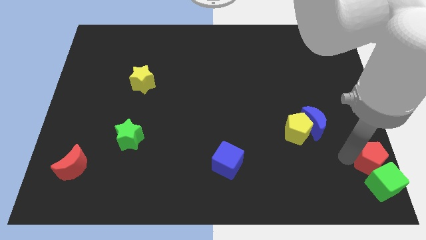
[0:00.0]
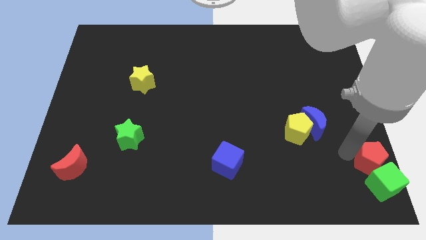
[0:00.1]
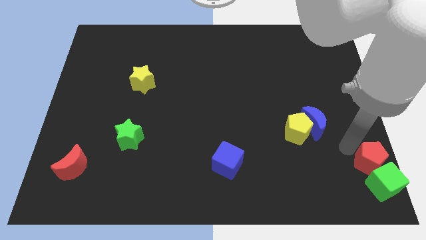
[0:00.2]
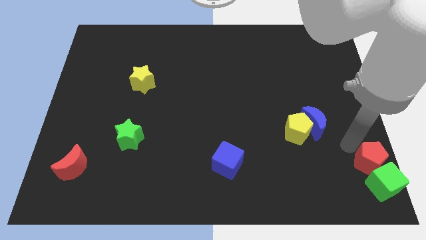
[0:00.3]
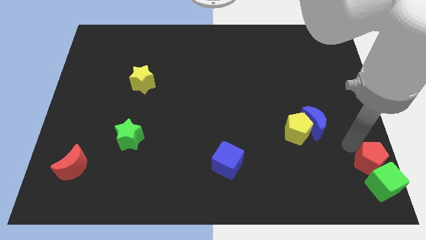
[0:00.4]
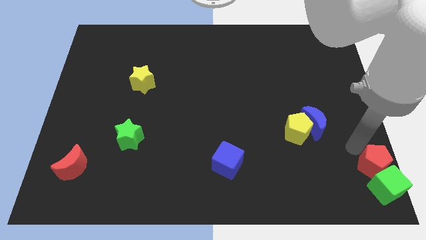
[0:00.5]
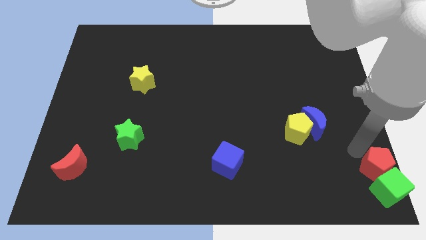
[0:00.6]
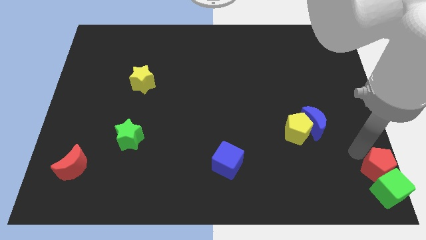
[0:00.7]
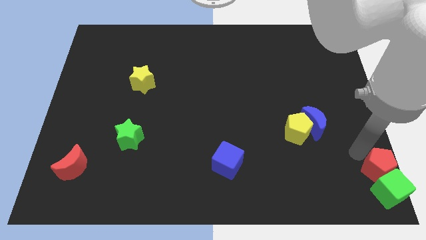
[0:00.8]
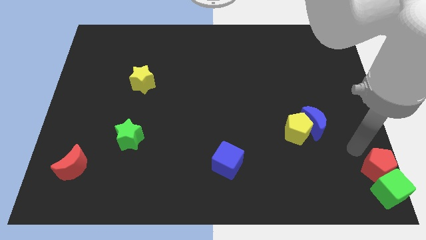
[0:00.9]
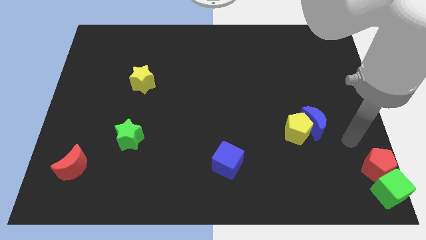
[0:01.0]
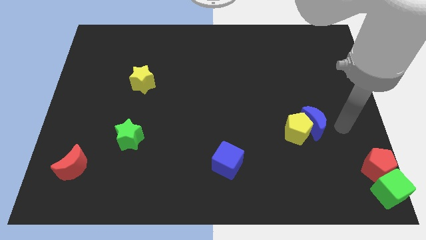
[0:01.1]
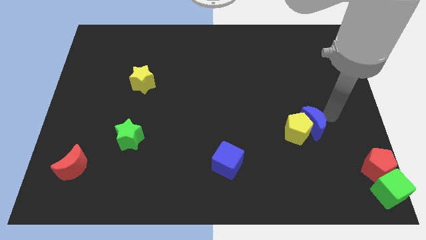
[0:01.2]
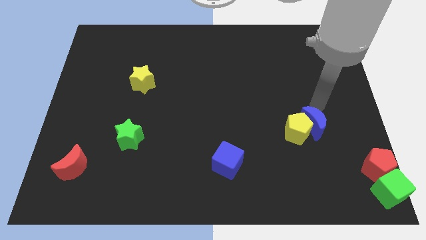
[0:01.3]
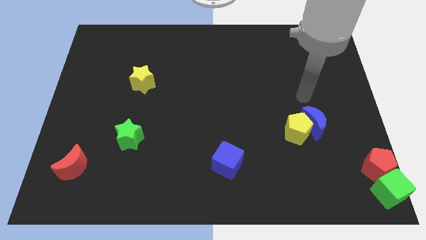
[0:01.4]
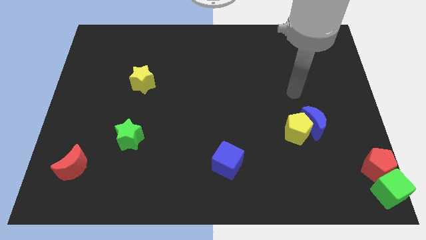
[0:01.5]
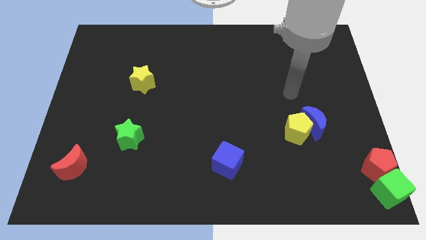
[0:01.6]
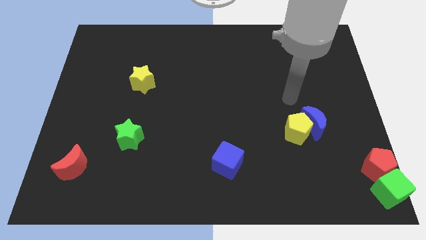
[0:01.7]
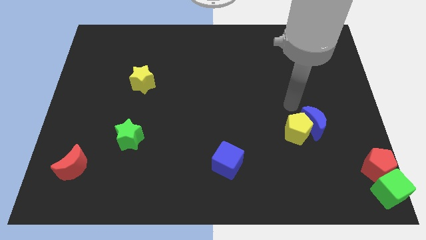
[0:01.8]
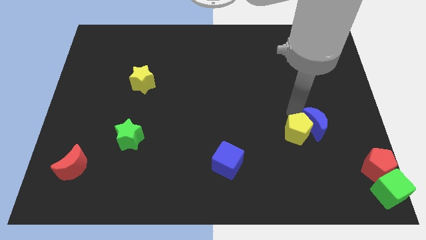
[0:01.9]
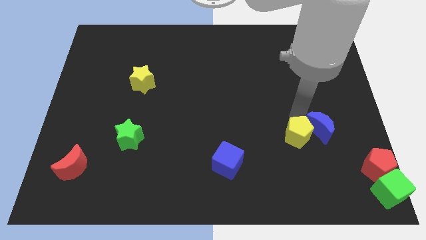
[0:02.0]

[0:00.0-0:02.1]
place your arm above the yellow pentagon

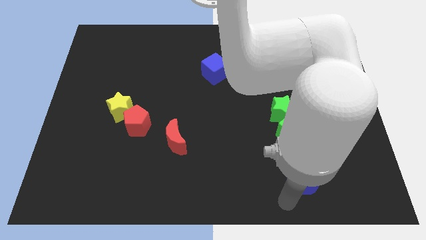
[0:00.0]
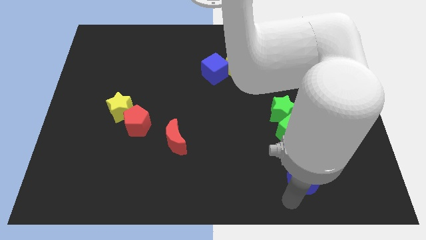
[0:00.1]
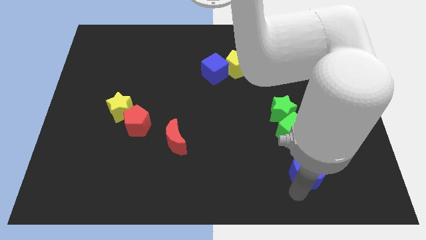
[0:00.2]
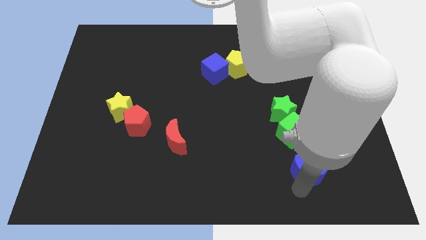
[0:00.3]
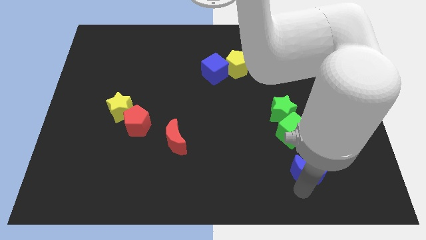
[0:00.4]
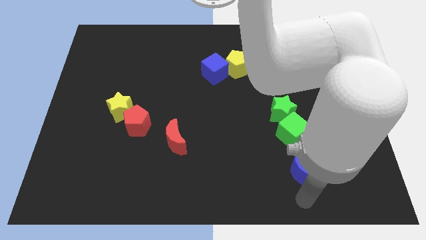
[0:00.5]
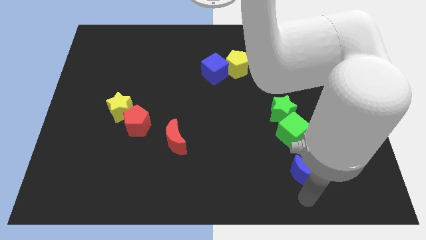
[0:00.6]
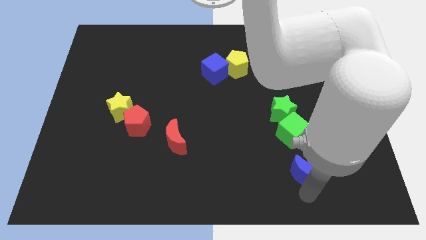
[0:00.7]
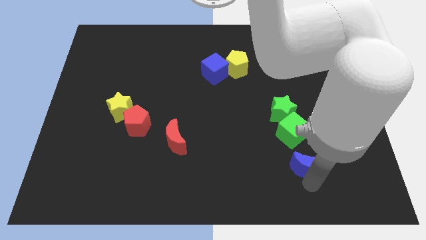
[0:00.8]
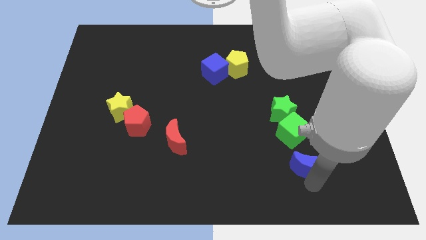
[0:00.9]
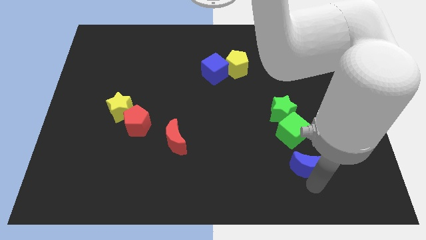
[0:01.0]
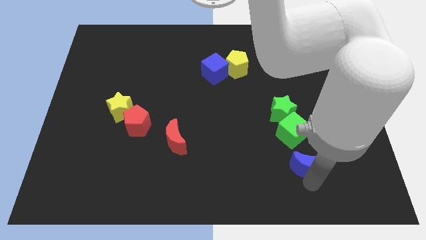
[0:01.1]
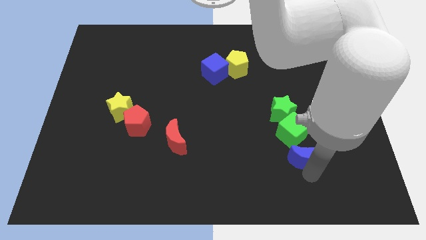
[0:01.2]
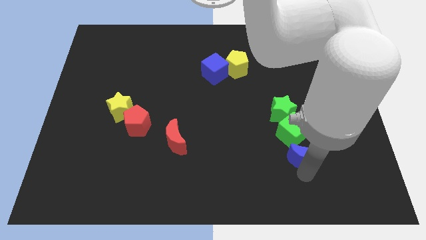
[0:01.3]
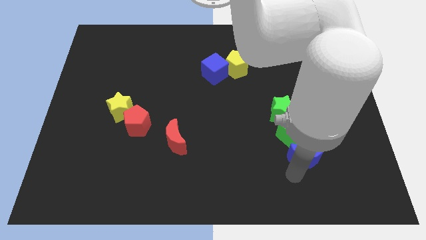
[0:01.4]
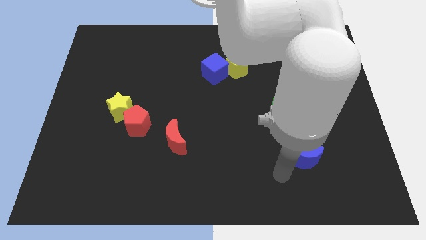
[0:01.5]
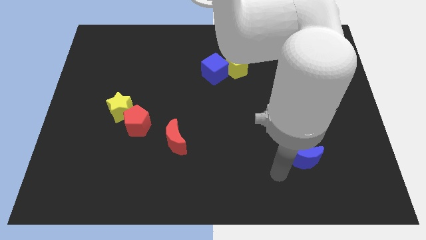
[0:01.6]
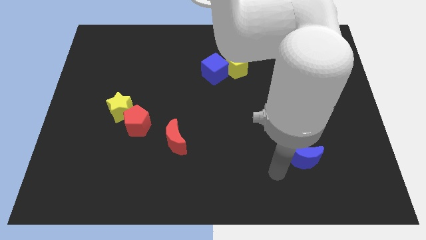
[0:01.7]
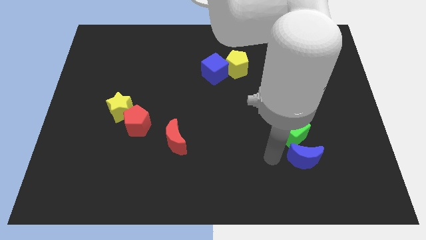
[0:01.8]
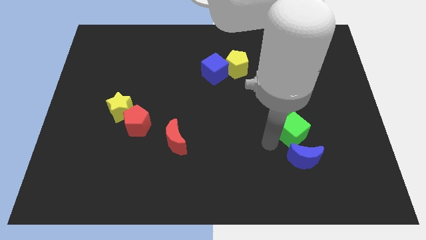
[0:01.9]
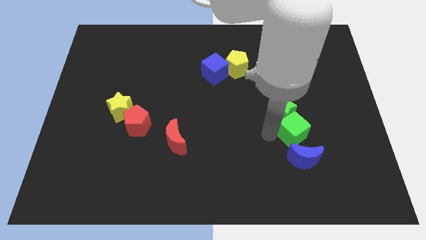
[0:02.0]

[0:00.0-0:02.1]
move blue moon into green cube

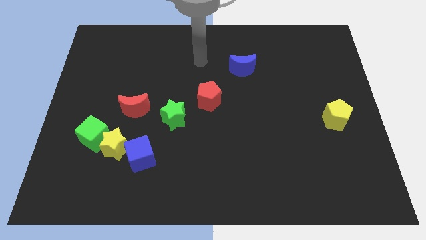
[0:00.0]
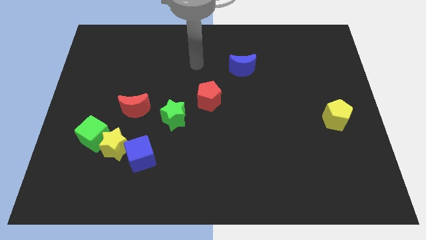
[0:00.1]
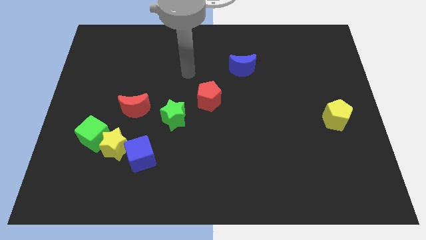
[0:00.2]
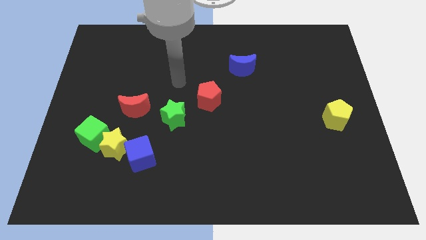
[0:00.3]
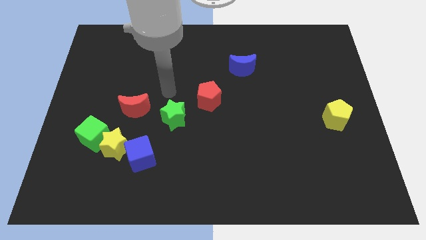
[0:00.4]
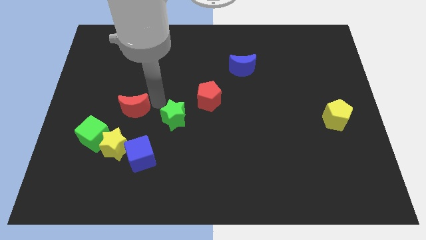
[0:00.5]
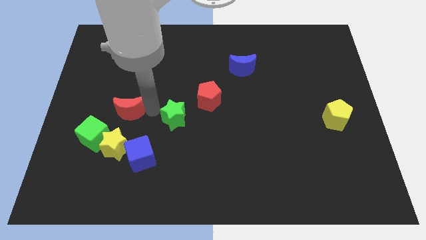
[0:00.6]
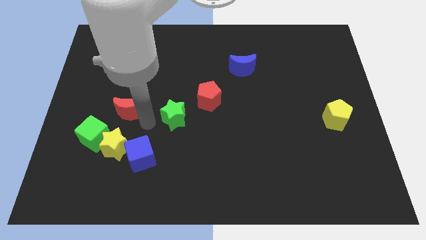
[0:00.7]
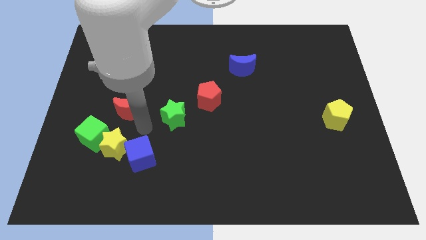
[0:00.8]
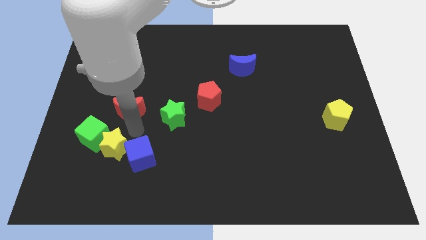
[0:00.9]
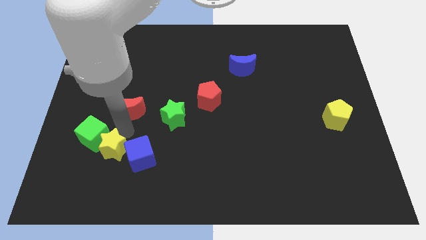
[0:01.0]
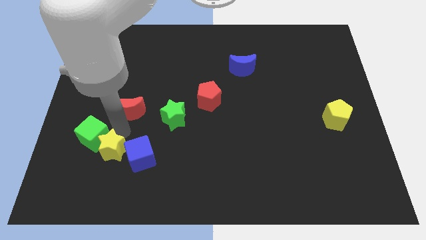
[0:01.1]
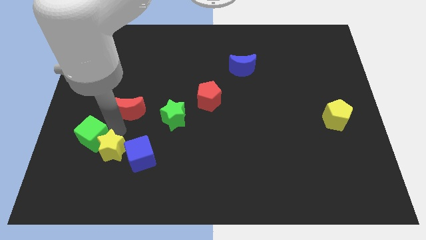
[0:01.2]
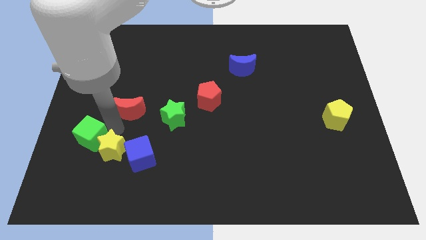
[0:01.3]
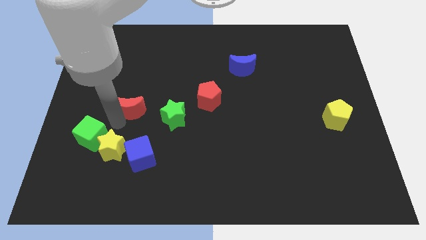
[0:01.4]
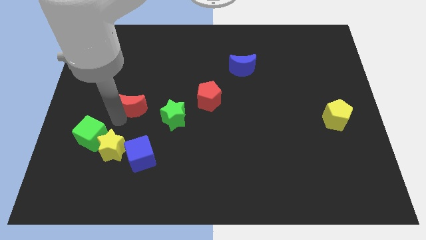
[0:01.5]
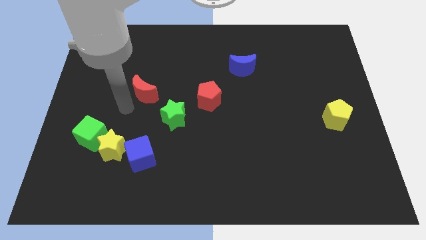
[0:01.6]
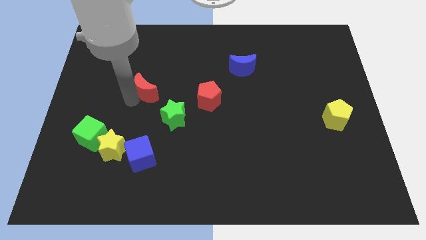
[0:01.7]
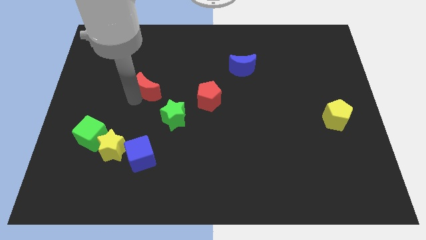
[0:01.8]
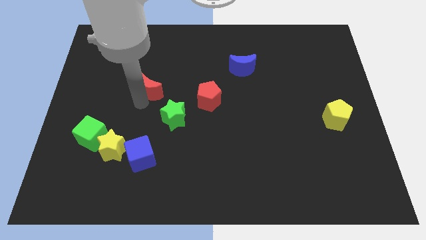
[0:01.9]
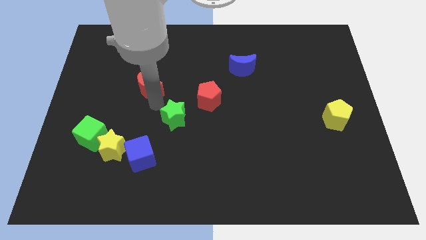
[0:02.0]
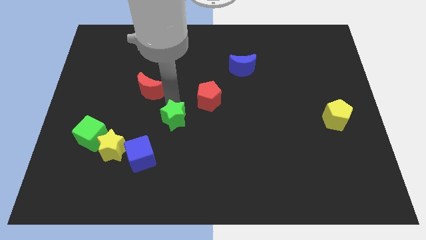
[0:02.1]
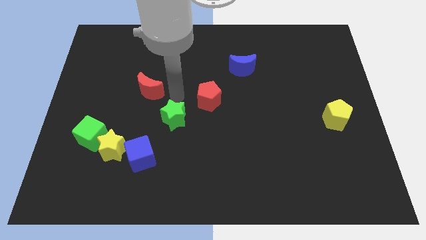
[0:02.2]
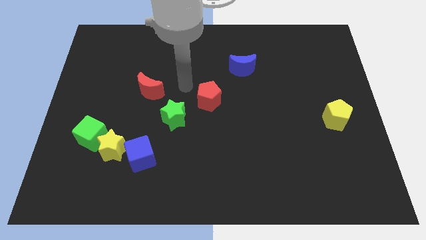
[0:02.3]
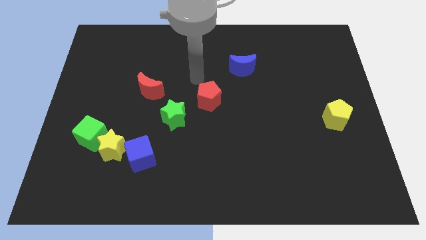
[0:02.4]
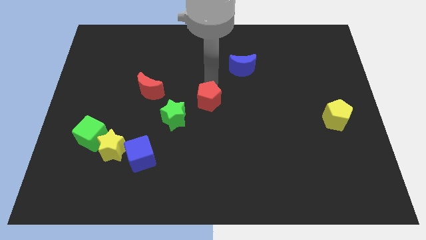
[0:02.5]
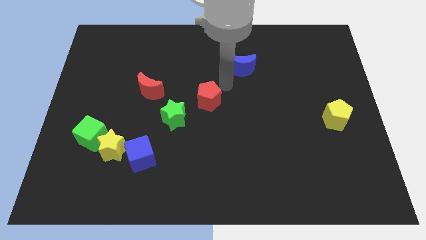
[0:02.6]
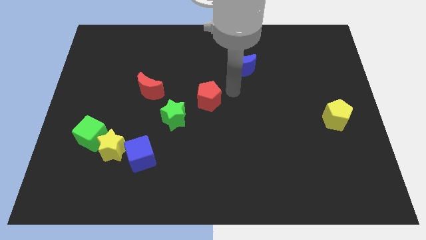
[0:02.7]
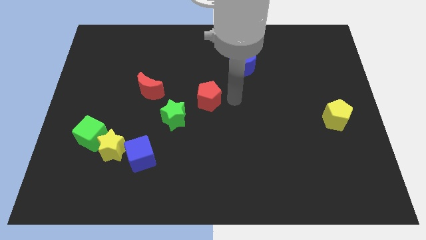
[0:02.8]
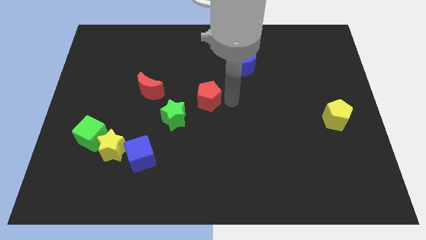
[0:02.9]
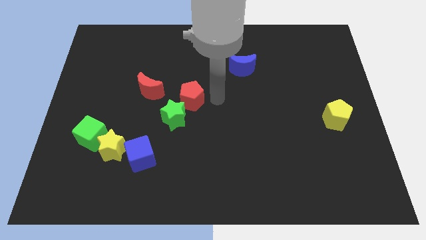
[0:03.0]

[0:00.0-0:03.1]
move red moon to the top of the green star

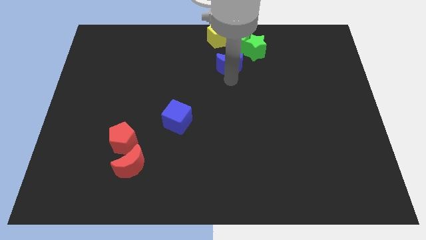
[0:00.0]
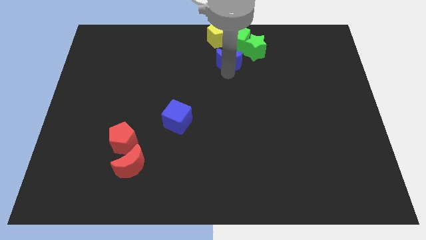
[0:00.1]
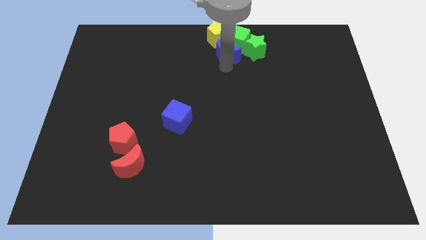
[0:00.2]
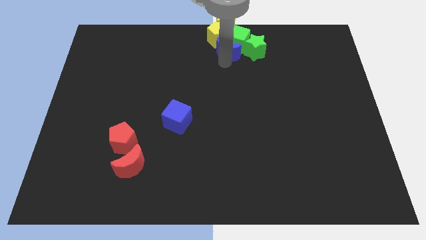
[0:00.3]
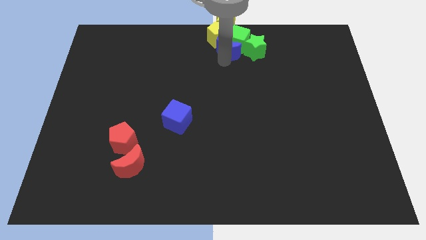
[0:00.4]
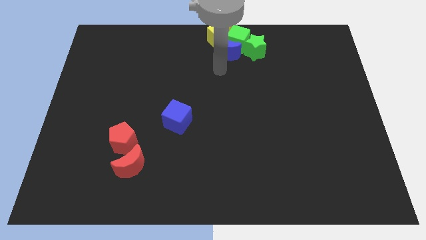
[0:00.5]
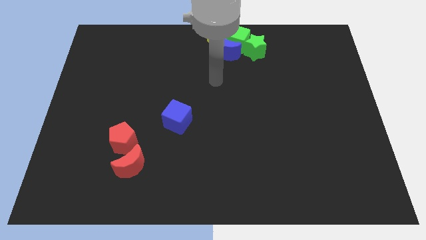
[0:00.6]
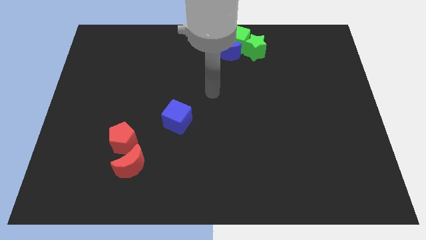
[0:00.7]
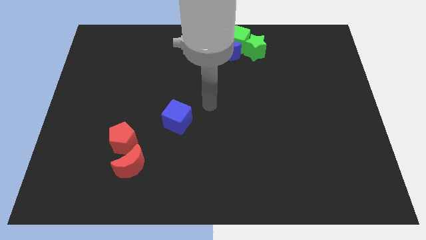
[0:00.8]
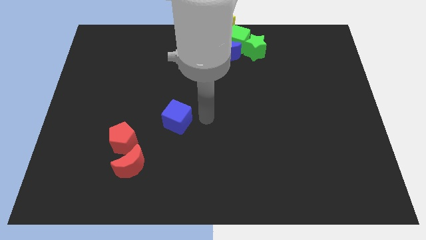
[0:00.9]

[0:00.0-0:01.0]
move the blue crescent into the group of blocks

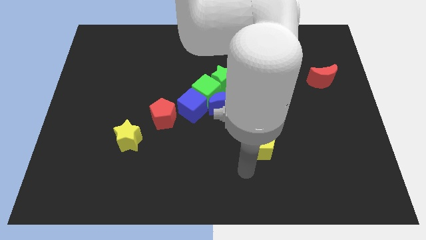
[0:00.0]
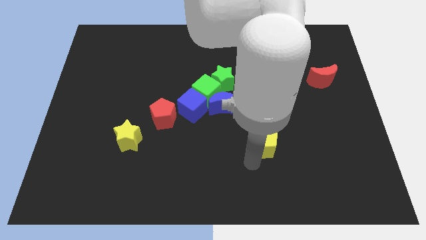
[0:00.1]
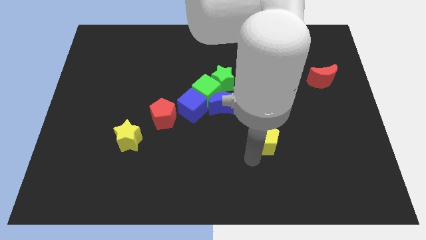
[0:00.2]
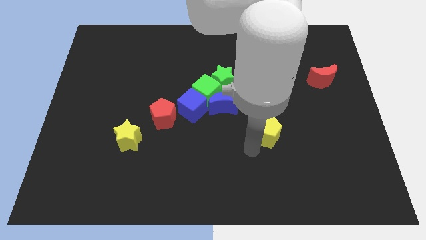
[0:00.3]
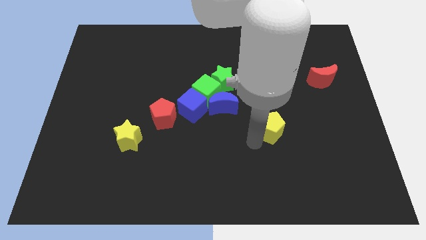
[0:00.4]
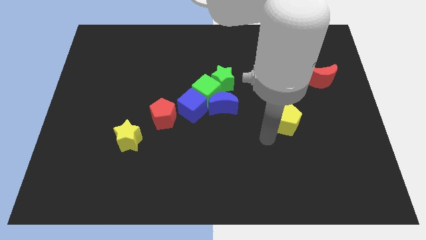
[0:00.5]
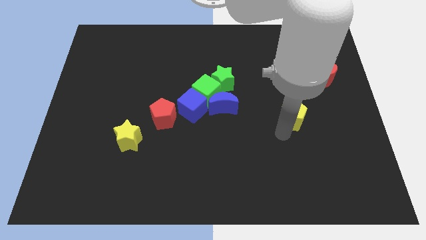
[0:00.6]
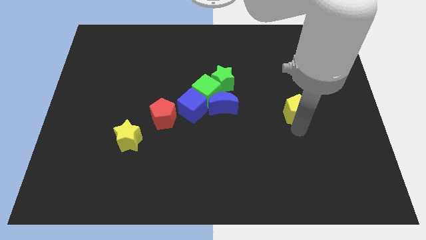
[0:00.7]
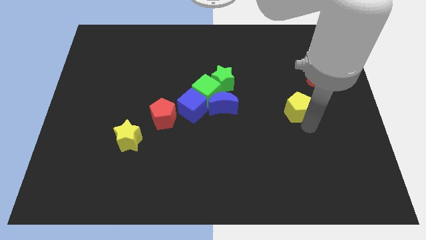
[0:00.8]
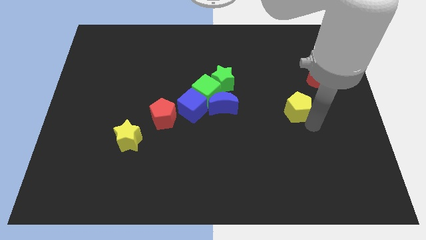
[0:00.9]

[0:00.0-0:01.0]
place the yellow pentagon to the right of the blue crescent
